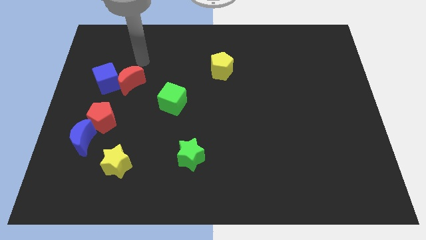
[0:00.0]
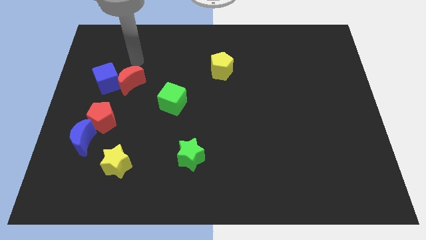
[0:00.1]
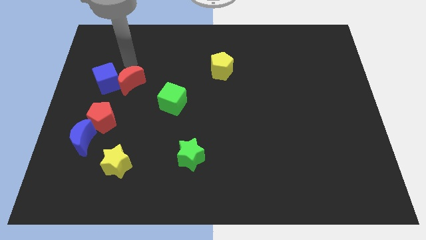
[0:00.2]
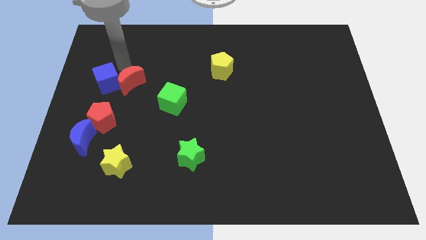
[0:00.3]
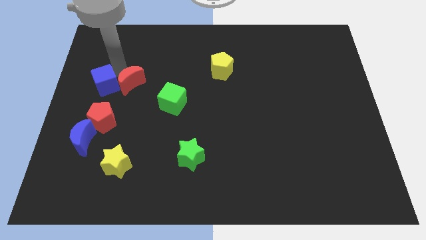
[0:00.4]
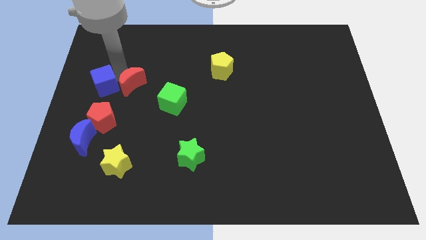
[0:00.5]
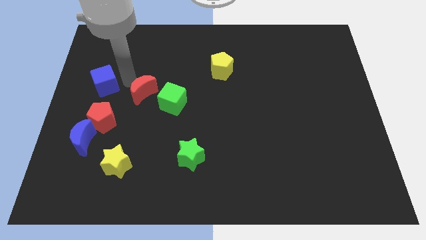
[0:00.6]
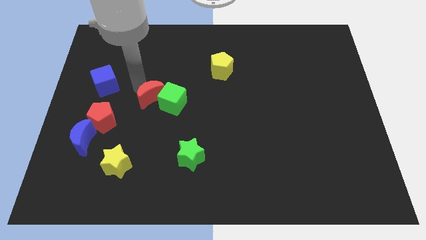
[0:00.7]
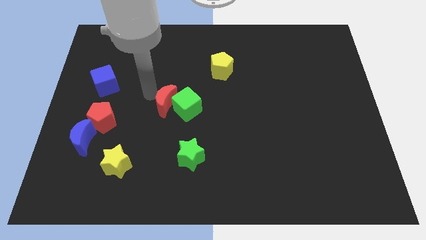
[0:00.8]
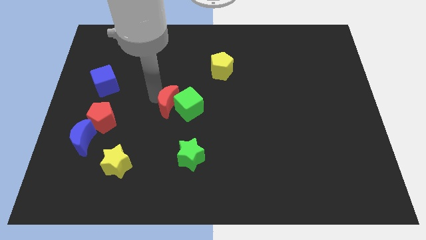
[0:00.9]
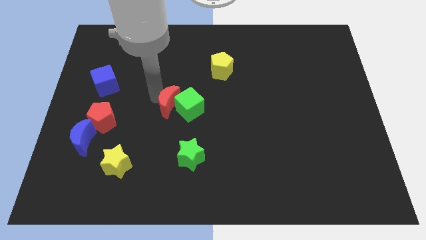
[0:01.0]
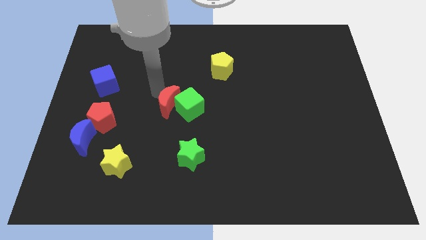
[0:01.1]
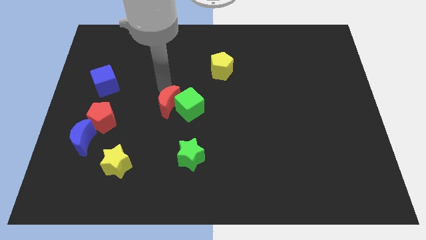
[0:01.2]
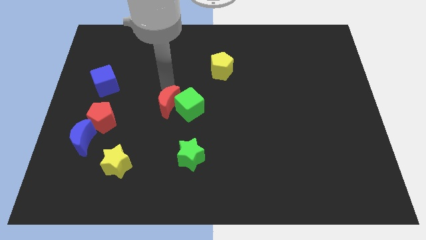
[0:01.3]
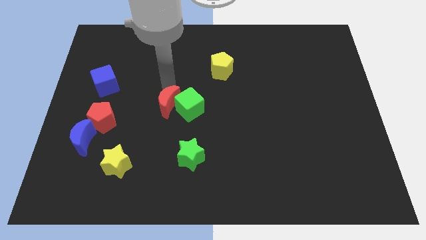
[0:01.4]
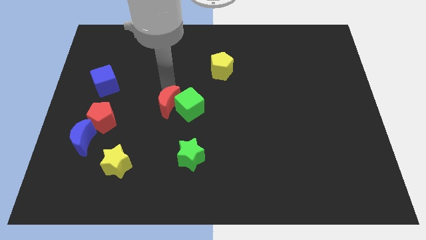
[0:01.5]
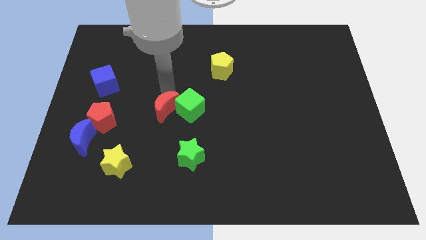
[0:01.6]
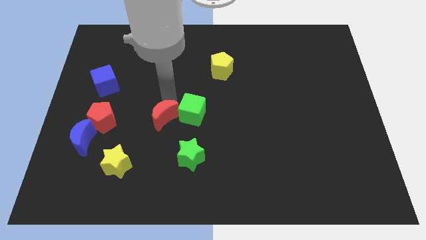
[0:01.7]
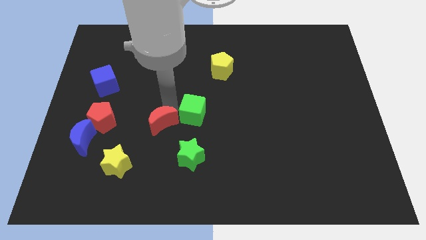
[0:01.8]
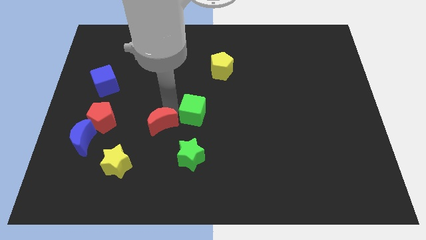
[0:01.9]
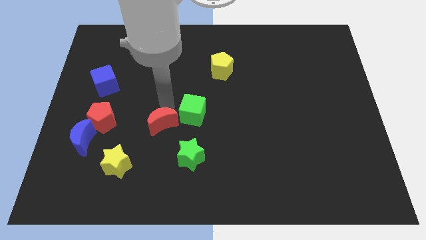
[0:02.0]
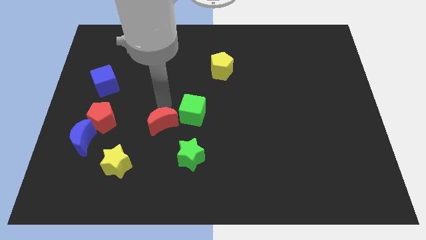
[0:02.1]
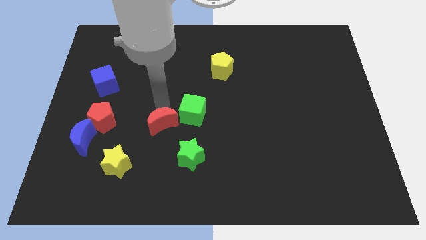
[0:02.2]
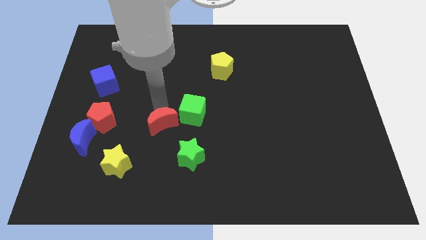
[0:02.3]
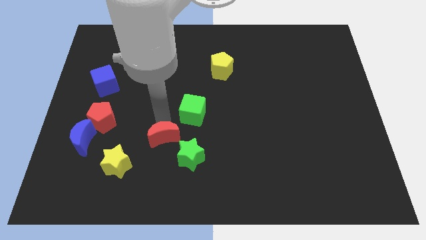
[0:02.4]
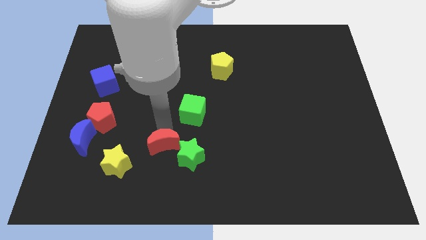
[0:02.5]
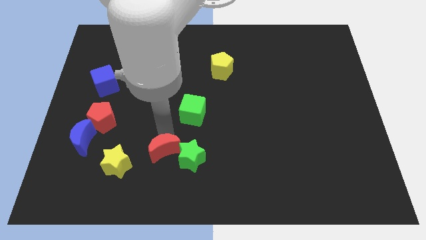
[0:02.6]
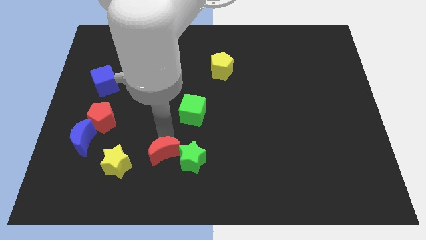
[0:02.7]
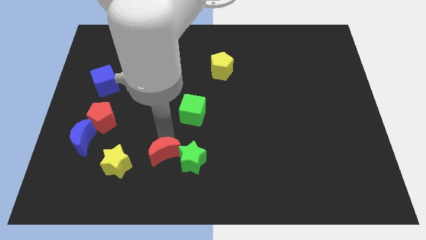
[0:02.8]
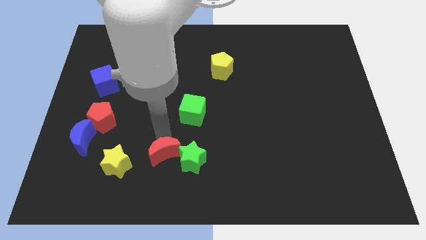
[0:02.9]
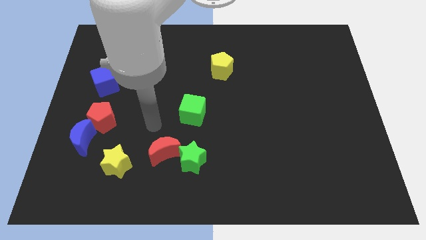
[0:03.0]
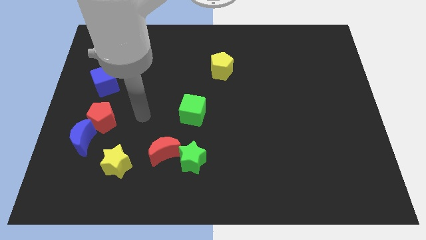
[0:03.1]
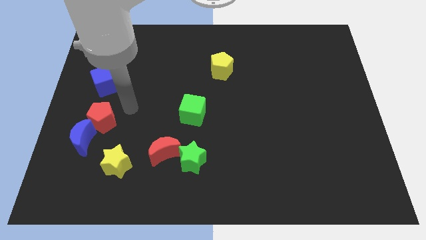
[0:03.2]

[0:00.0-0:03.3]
push the red crescent into the green star

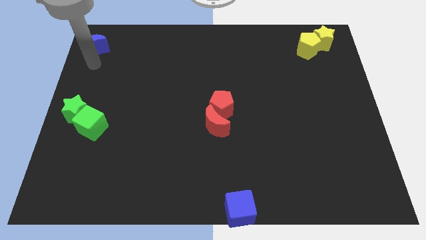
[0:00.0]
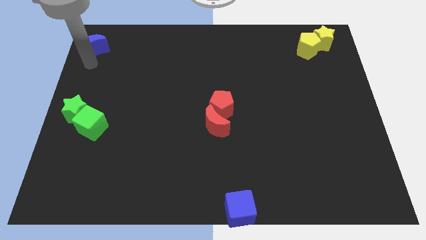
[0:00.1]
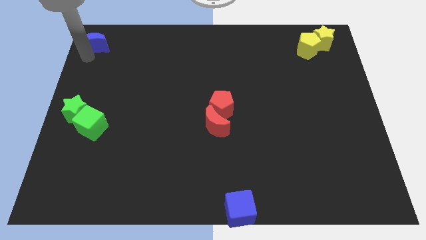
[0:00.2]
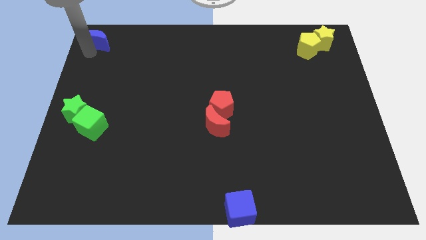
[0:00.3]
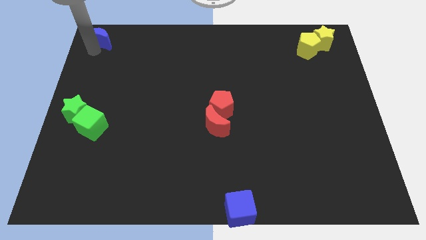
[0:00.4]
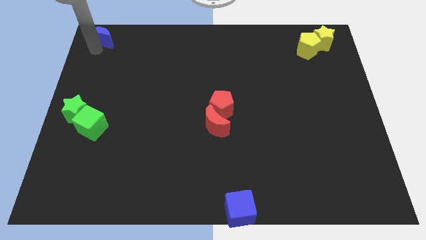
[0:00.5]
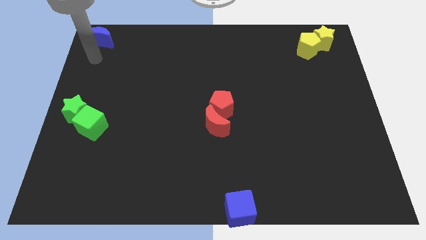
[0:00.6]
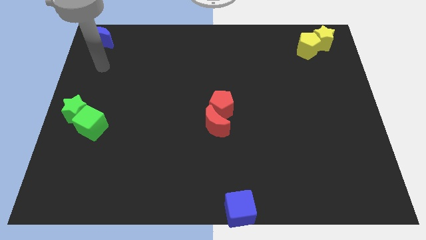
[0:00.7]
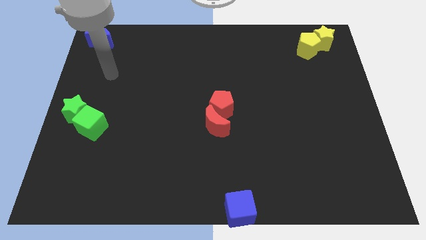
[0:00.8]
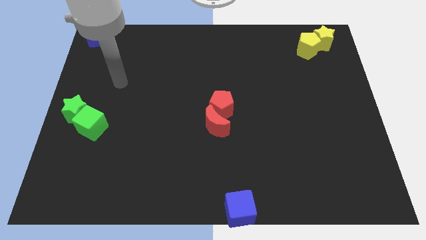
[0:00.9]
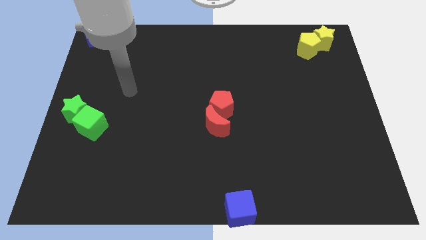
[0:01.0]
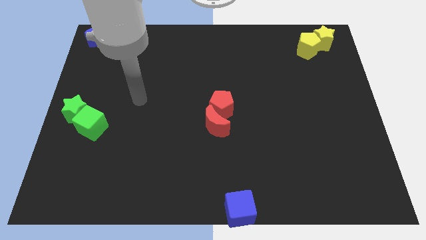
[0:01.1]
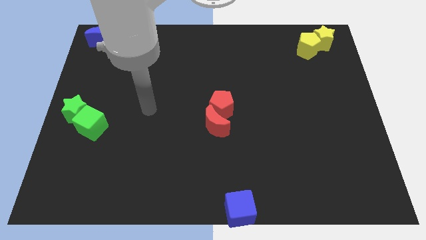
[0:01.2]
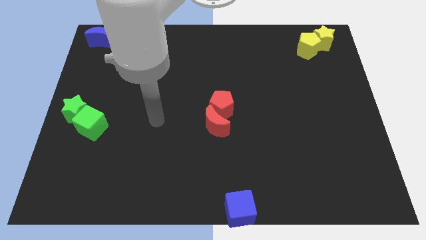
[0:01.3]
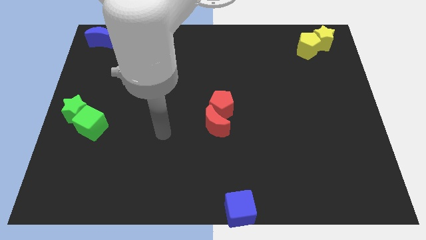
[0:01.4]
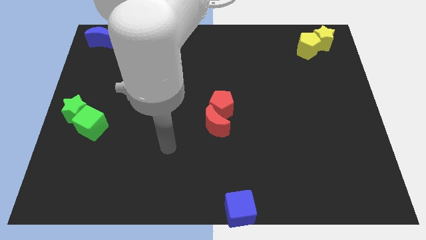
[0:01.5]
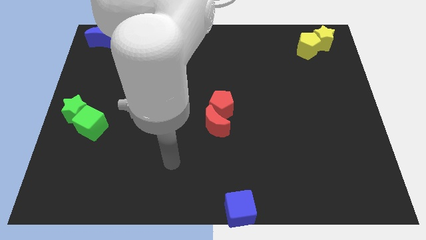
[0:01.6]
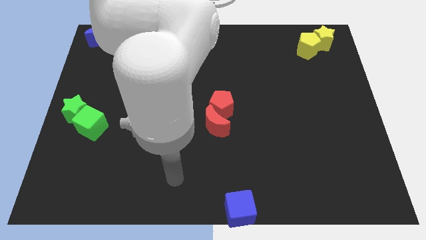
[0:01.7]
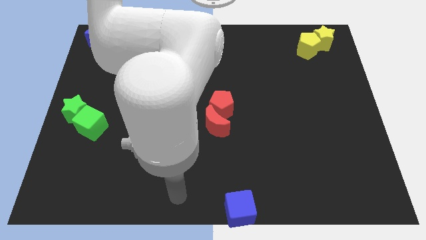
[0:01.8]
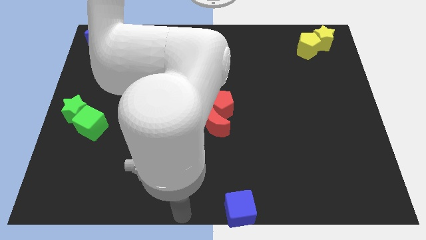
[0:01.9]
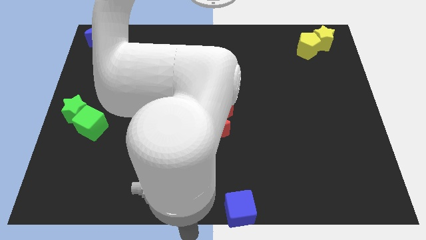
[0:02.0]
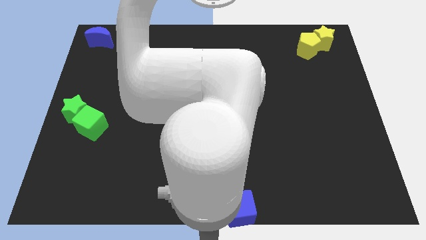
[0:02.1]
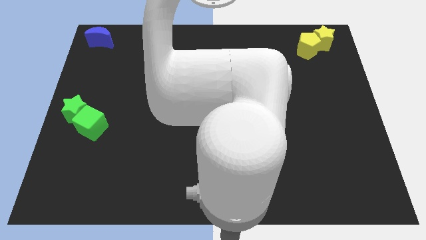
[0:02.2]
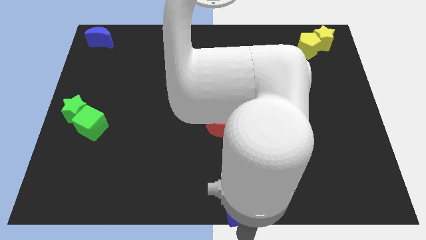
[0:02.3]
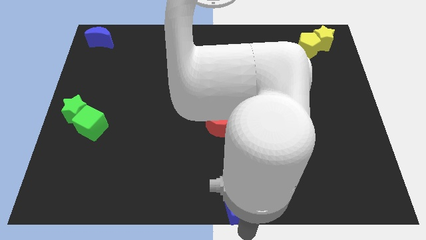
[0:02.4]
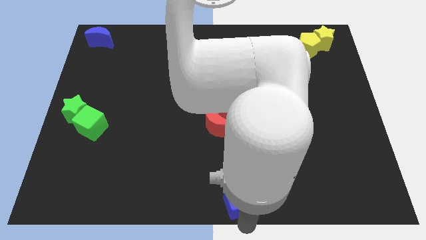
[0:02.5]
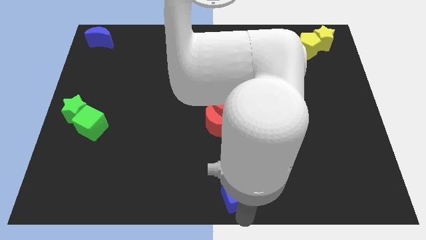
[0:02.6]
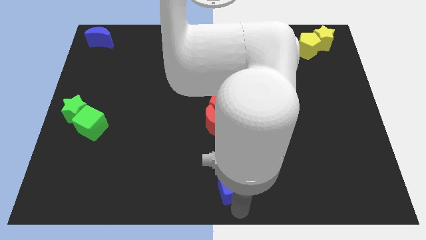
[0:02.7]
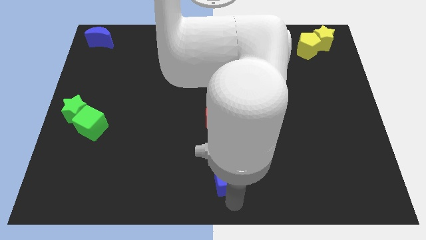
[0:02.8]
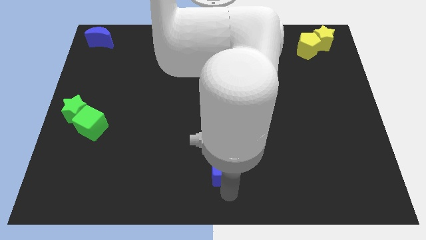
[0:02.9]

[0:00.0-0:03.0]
move blue moon to the top left push blue cube towards upward

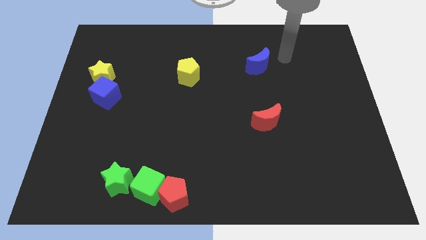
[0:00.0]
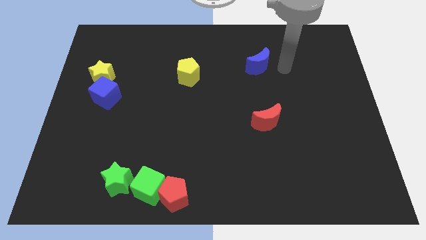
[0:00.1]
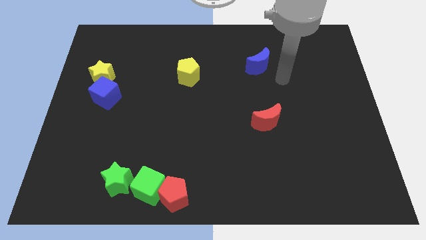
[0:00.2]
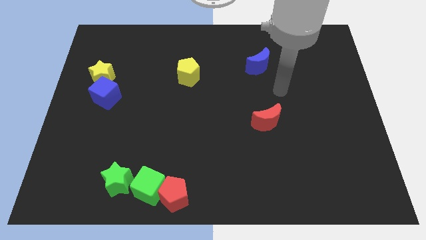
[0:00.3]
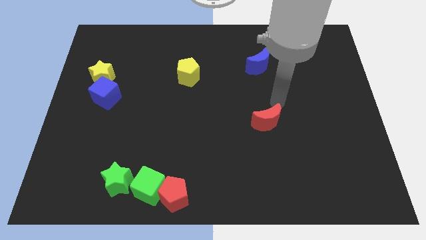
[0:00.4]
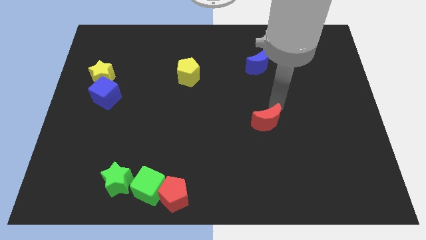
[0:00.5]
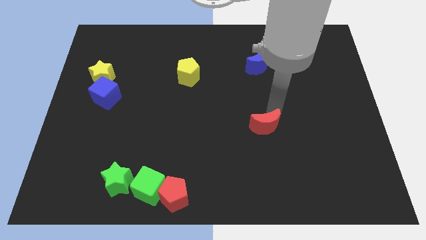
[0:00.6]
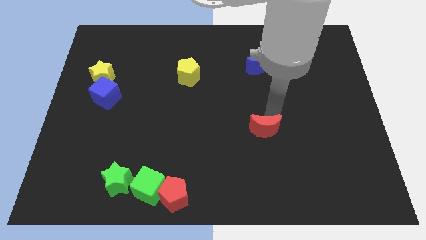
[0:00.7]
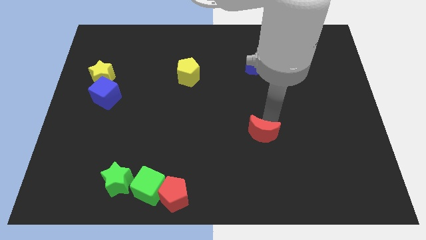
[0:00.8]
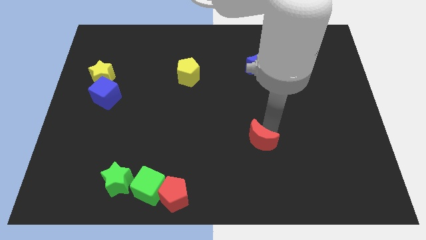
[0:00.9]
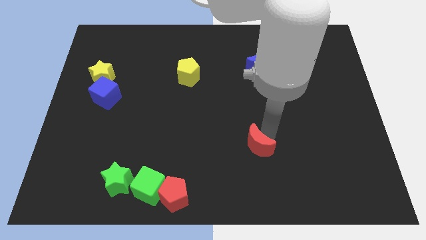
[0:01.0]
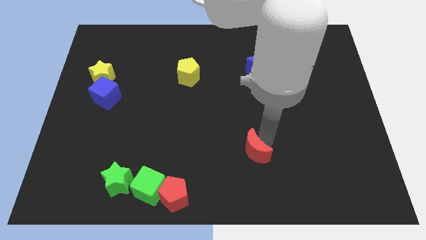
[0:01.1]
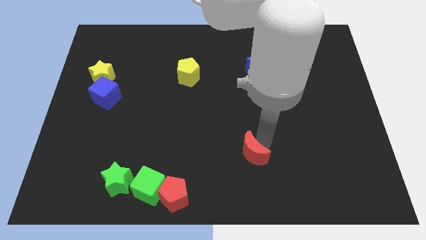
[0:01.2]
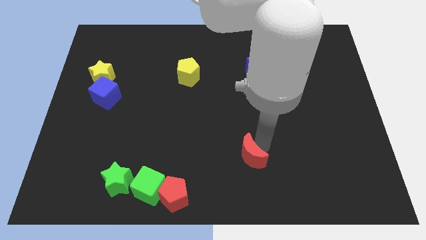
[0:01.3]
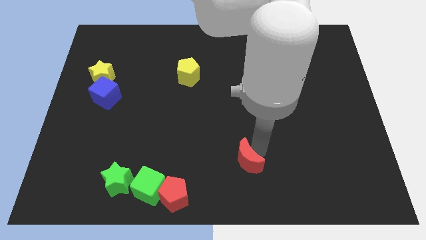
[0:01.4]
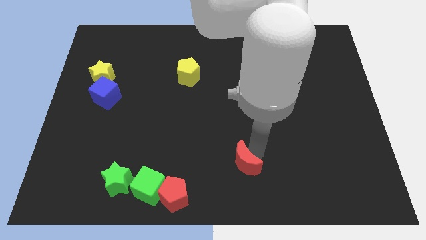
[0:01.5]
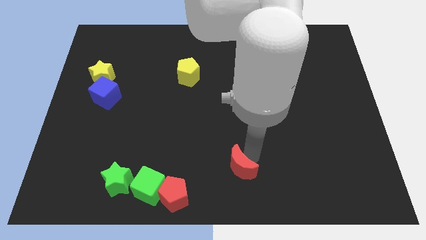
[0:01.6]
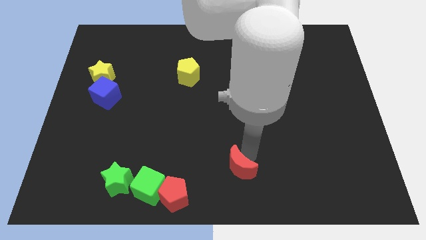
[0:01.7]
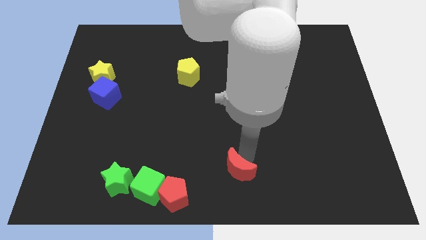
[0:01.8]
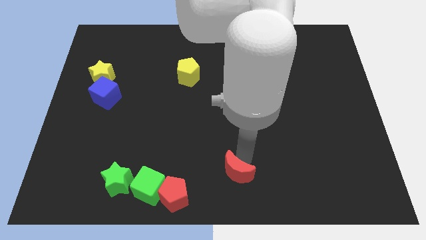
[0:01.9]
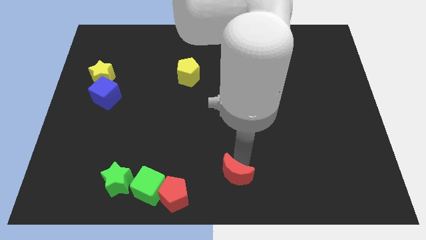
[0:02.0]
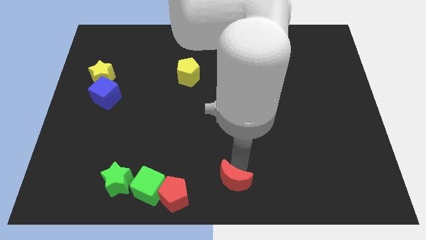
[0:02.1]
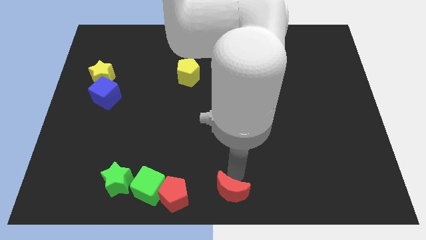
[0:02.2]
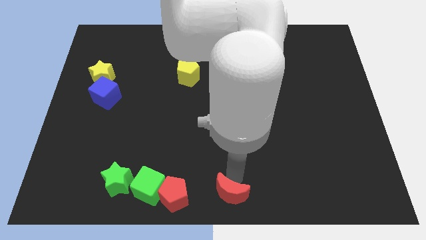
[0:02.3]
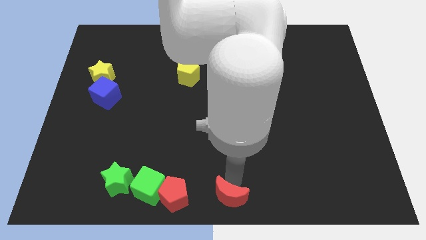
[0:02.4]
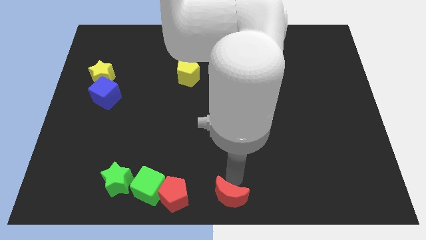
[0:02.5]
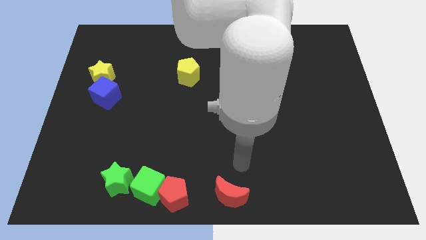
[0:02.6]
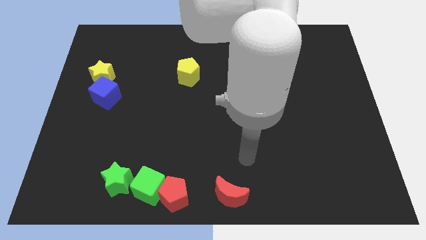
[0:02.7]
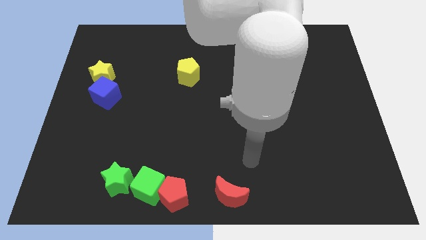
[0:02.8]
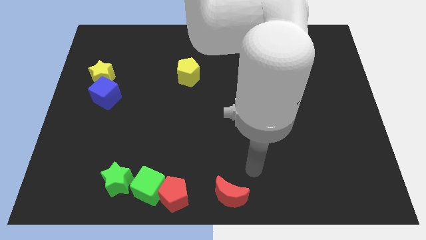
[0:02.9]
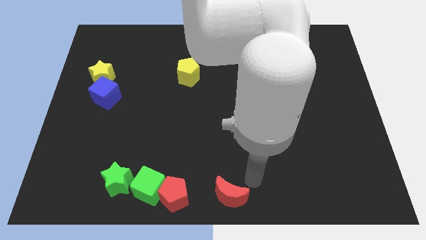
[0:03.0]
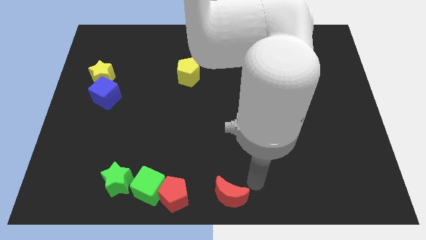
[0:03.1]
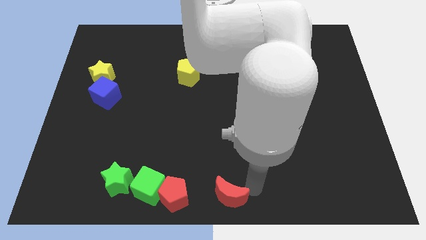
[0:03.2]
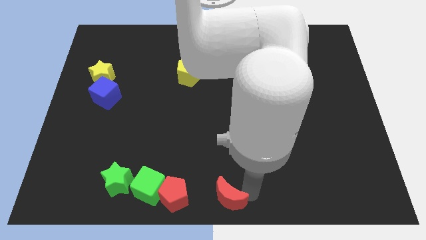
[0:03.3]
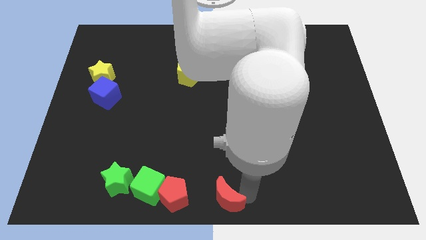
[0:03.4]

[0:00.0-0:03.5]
push the red crescent to the bottom center of the board
